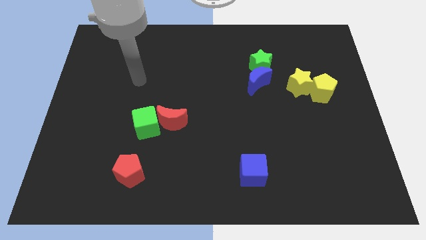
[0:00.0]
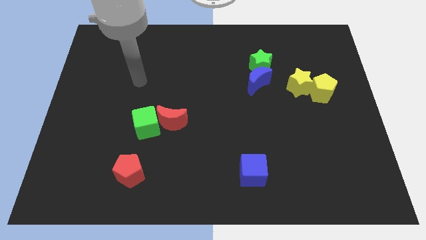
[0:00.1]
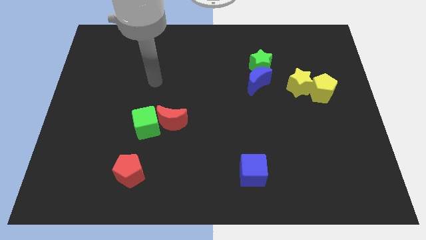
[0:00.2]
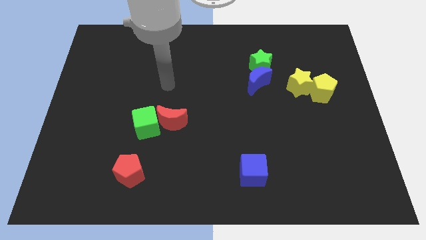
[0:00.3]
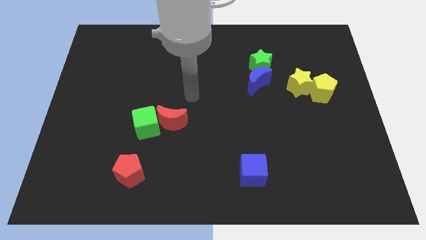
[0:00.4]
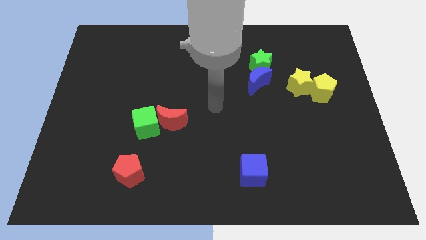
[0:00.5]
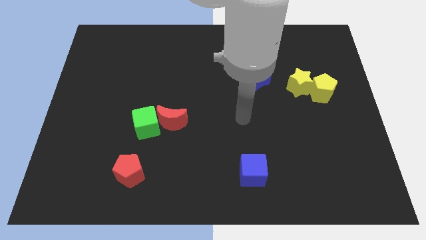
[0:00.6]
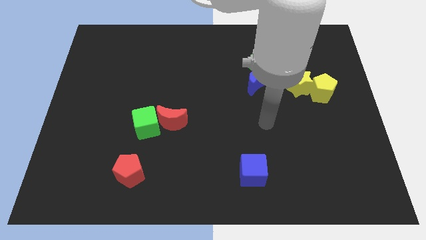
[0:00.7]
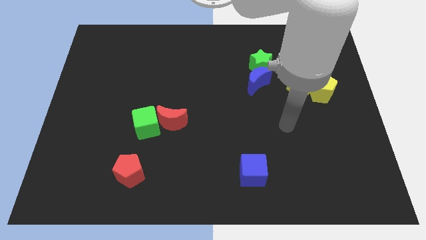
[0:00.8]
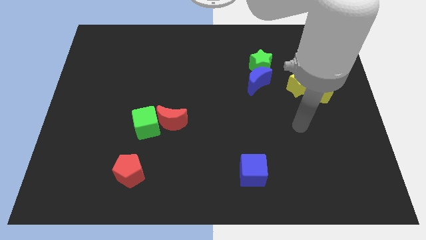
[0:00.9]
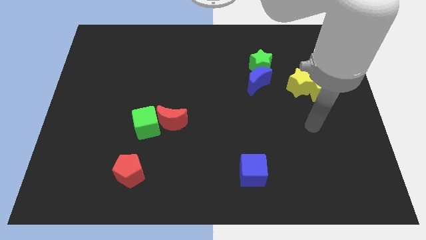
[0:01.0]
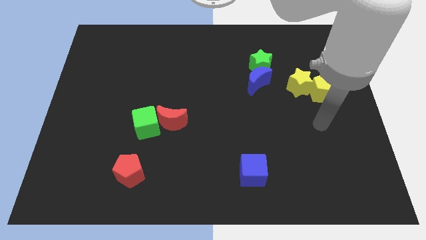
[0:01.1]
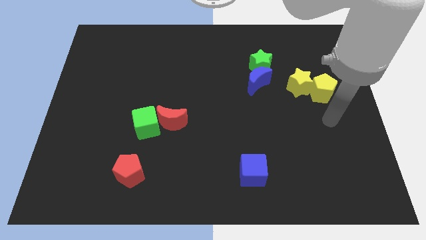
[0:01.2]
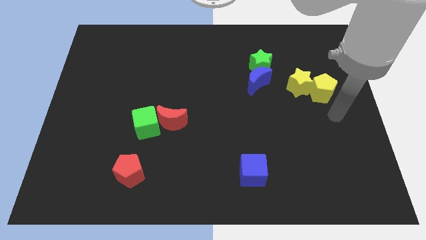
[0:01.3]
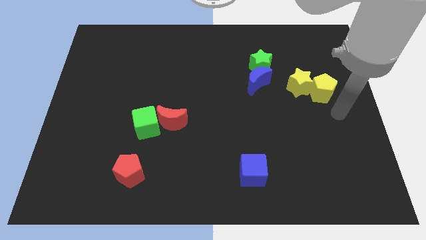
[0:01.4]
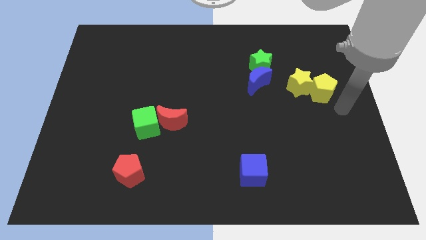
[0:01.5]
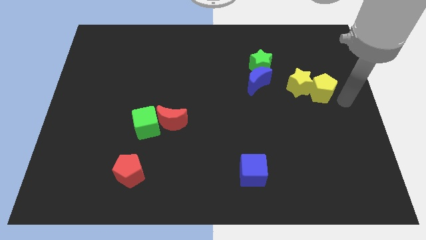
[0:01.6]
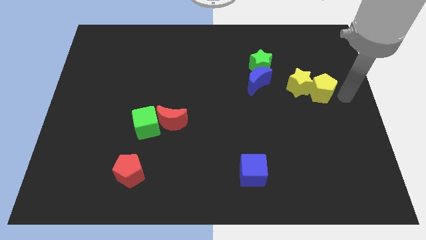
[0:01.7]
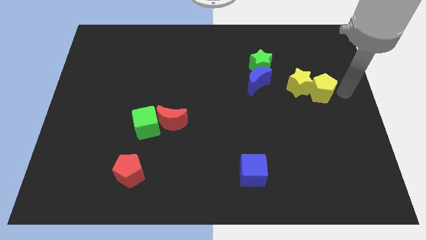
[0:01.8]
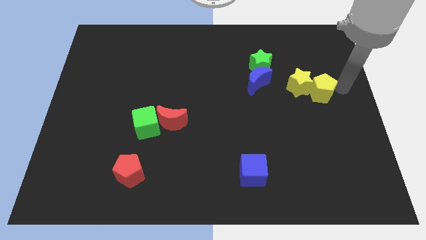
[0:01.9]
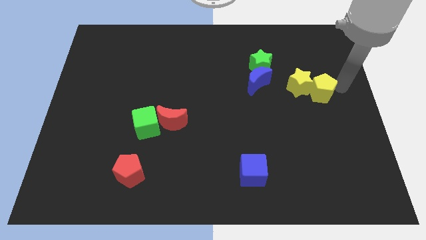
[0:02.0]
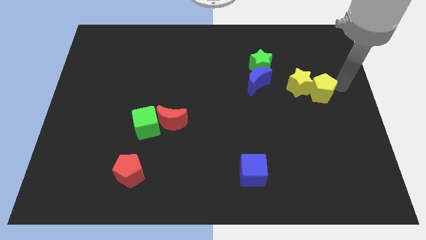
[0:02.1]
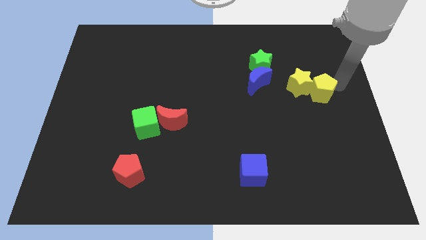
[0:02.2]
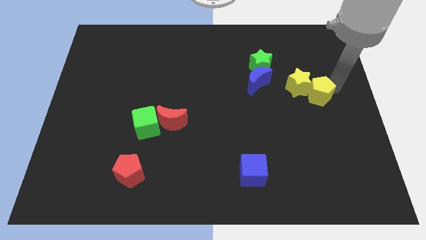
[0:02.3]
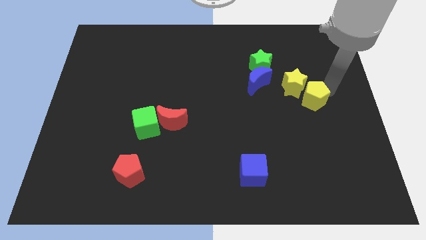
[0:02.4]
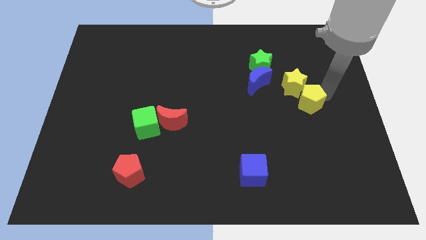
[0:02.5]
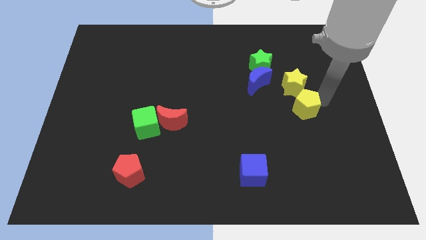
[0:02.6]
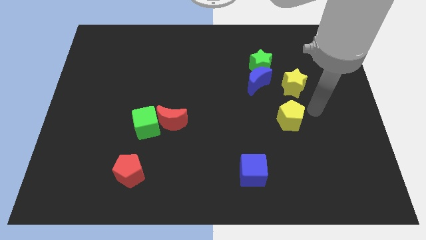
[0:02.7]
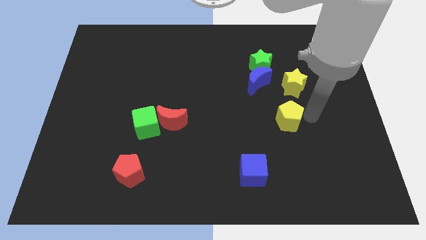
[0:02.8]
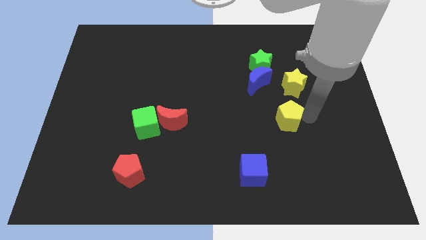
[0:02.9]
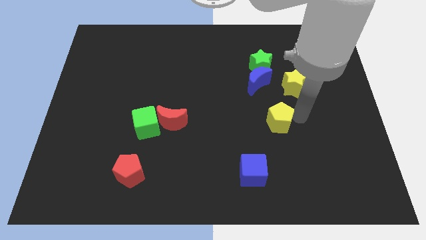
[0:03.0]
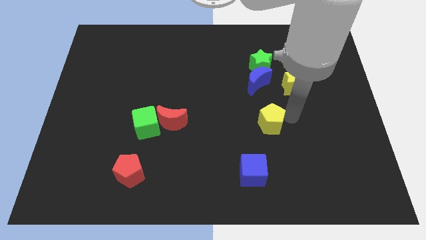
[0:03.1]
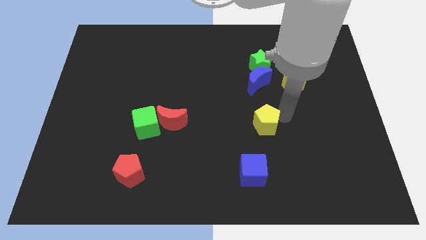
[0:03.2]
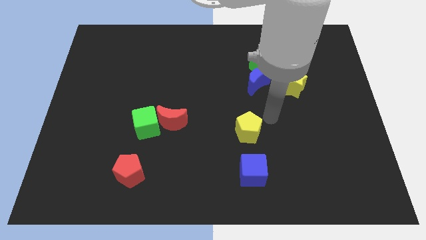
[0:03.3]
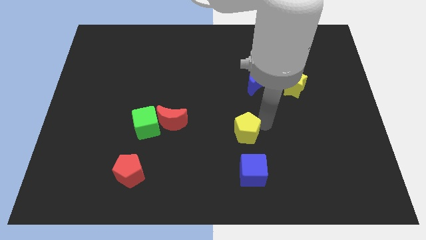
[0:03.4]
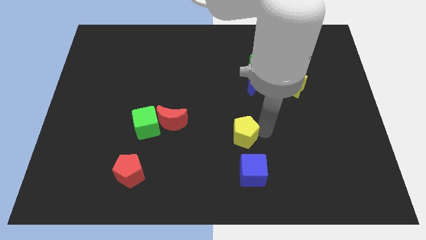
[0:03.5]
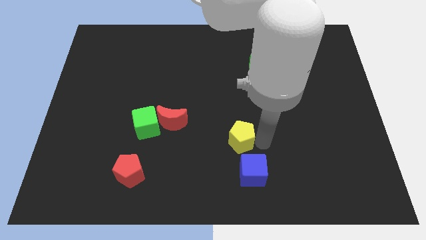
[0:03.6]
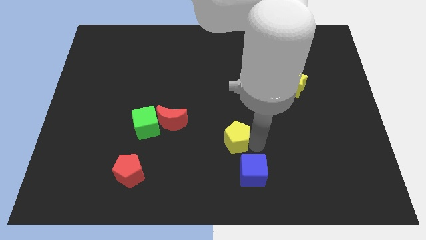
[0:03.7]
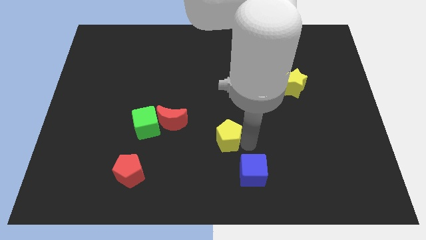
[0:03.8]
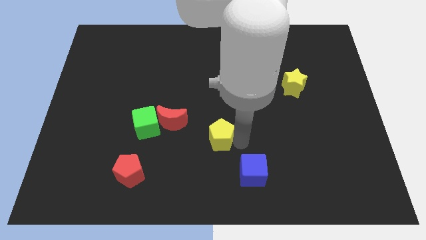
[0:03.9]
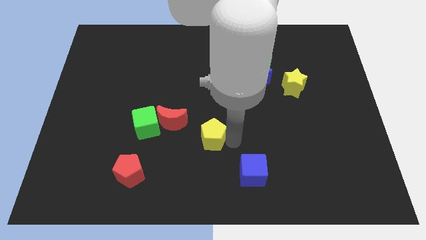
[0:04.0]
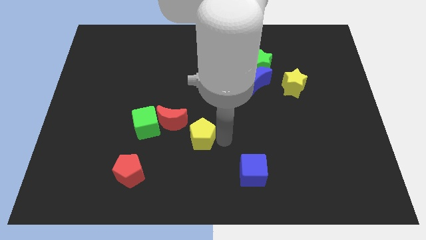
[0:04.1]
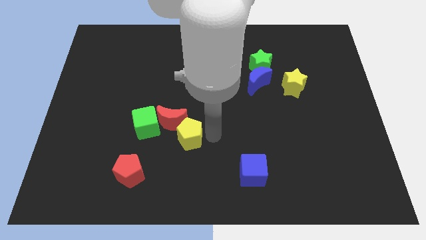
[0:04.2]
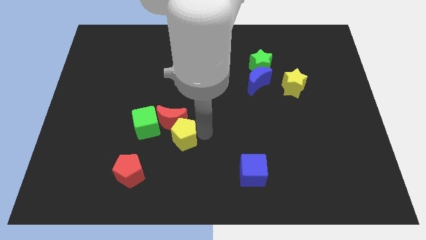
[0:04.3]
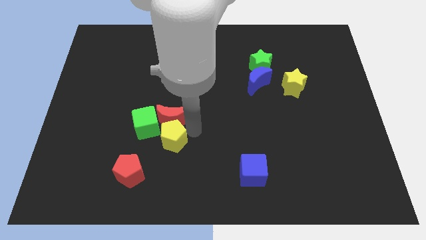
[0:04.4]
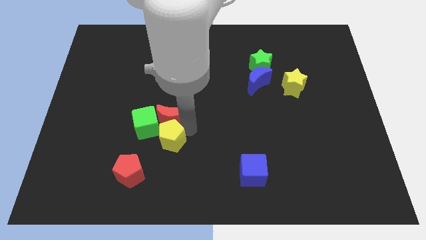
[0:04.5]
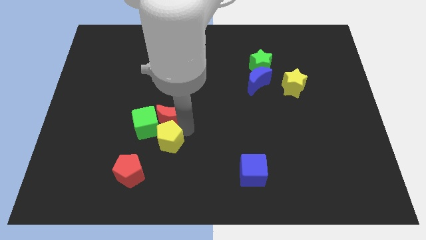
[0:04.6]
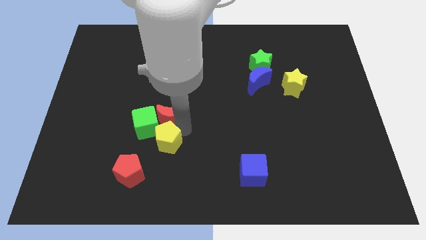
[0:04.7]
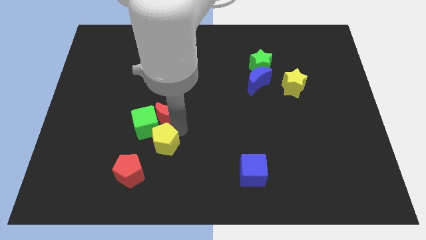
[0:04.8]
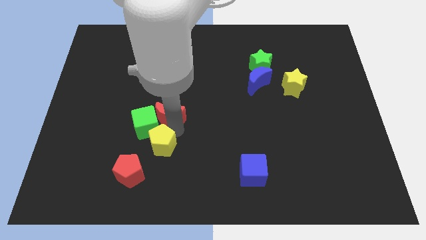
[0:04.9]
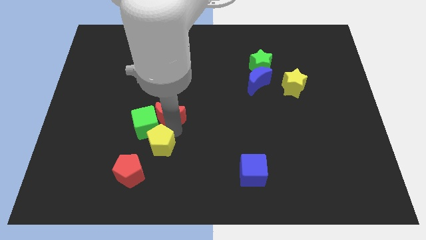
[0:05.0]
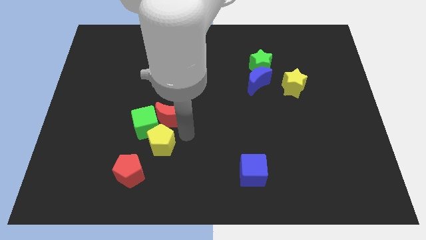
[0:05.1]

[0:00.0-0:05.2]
move the yellow pentagon towards the green cube

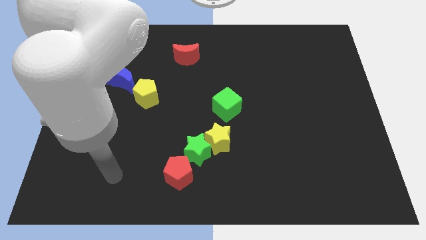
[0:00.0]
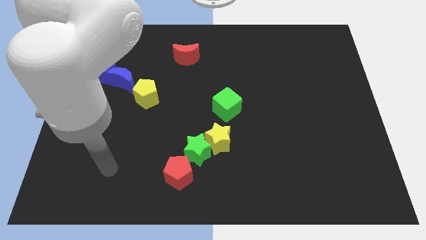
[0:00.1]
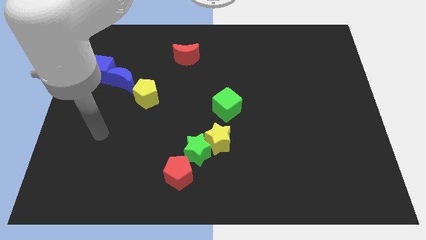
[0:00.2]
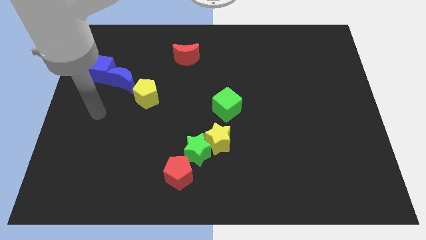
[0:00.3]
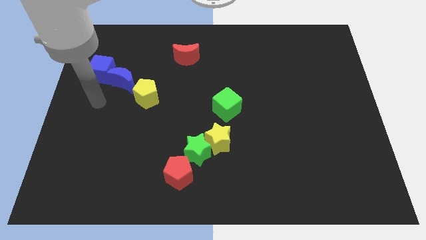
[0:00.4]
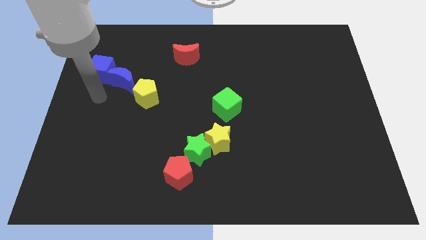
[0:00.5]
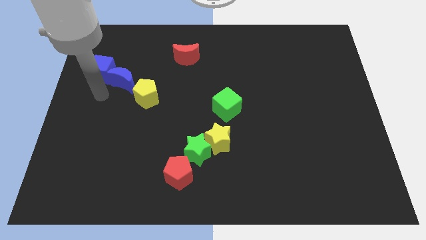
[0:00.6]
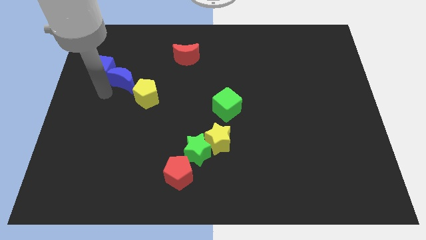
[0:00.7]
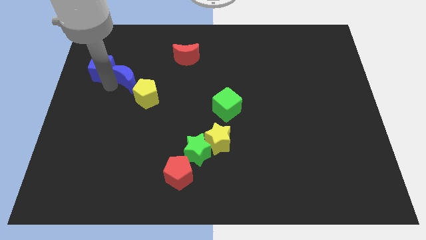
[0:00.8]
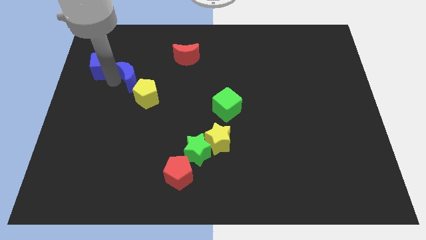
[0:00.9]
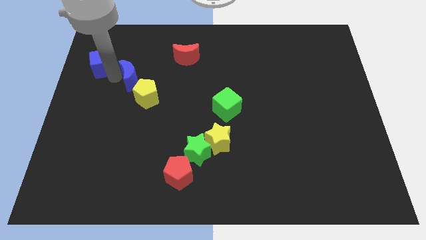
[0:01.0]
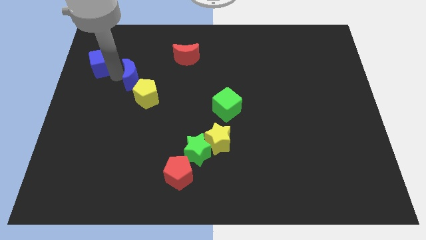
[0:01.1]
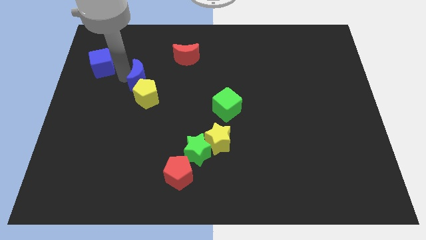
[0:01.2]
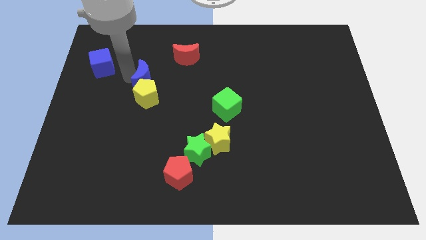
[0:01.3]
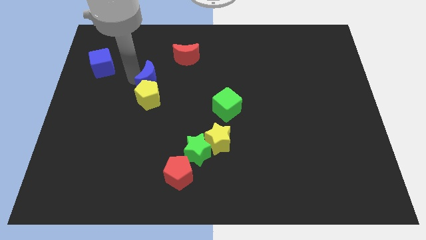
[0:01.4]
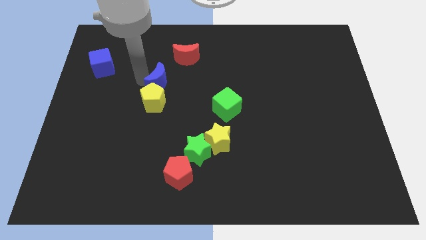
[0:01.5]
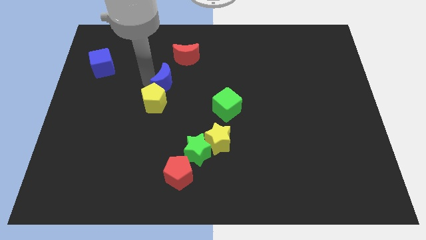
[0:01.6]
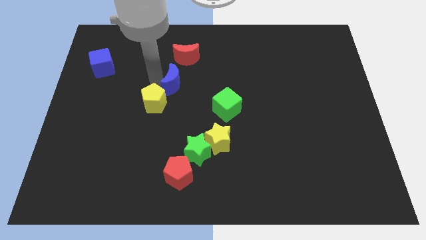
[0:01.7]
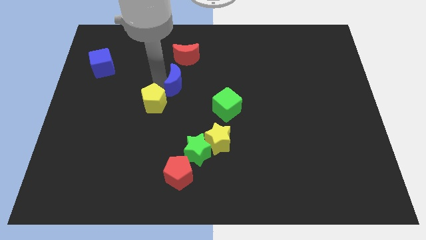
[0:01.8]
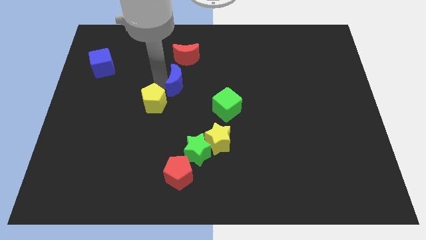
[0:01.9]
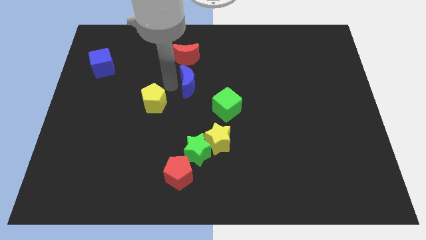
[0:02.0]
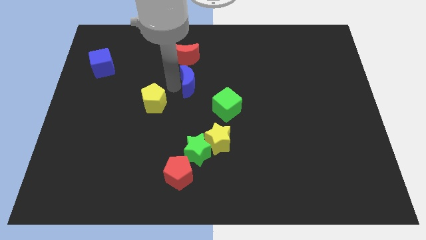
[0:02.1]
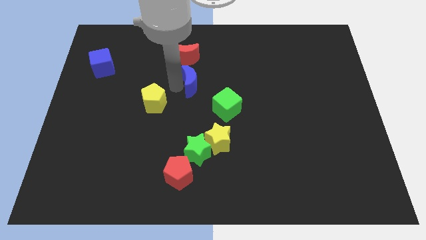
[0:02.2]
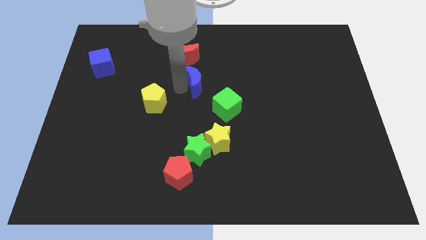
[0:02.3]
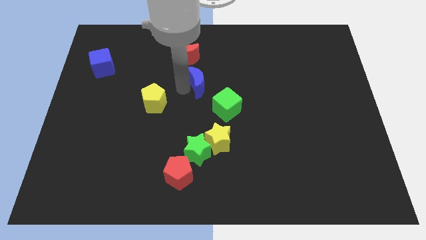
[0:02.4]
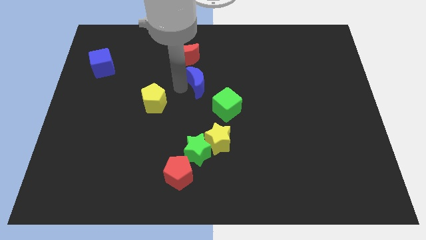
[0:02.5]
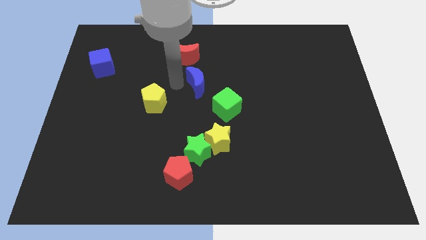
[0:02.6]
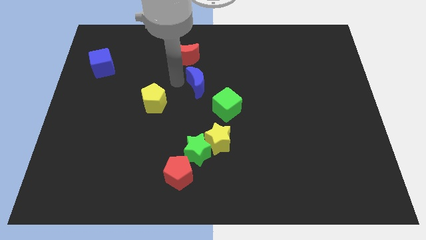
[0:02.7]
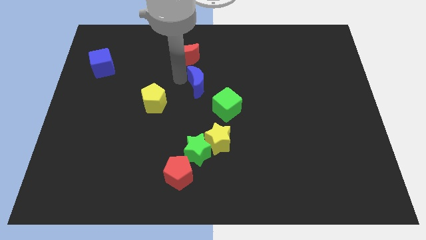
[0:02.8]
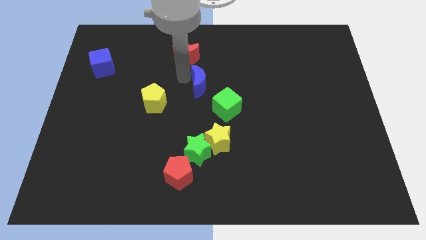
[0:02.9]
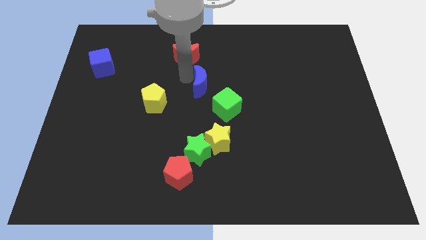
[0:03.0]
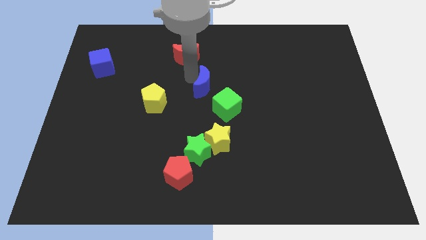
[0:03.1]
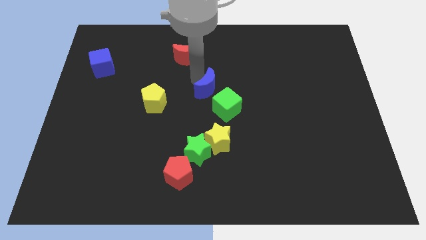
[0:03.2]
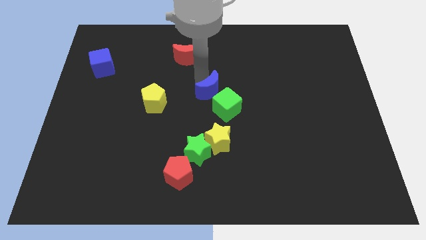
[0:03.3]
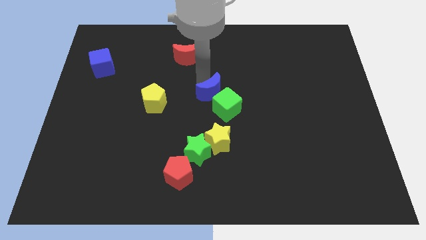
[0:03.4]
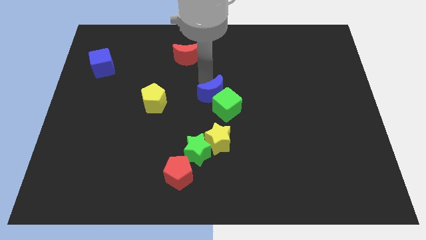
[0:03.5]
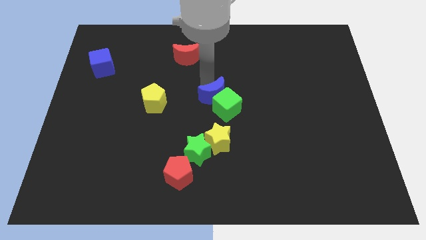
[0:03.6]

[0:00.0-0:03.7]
push the blue moon close to the green cube
